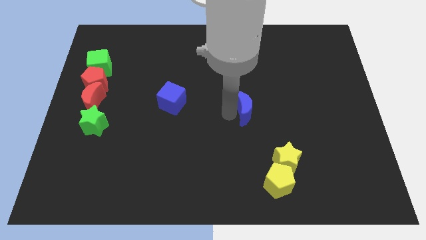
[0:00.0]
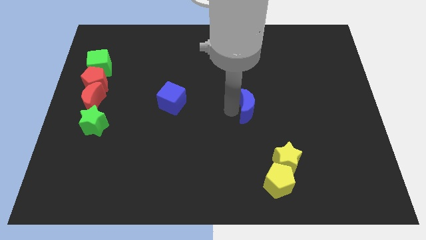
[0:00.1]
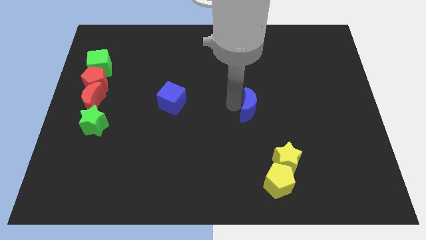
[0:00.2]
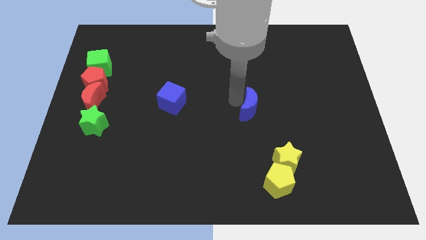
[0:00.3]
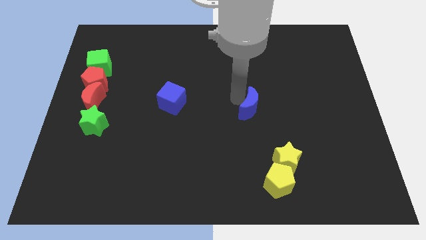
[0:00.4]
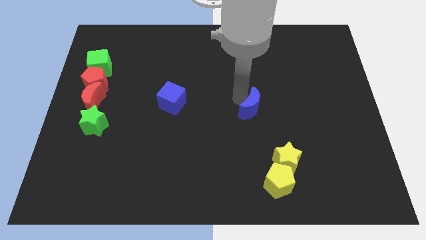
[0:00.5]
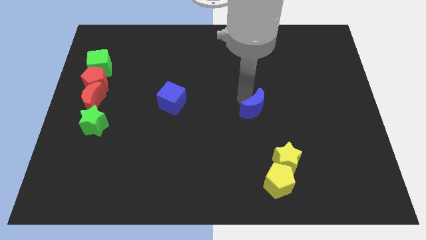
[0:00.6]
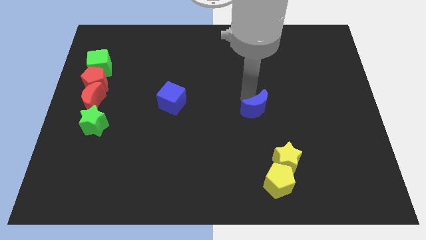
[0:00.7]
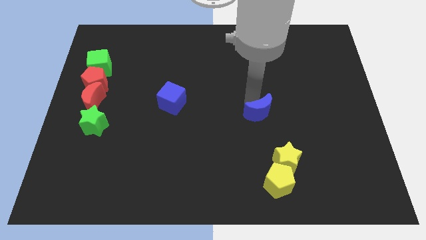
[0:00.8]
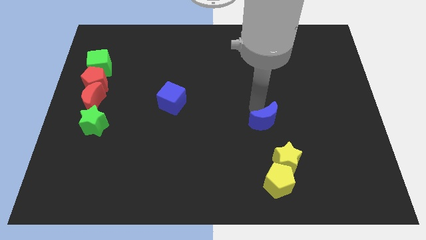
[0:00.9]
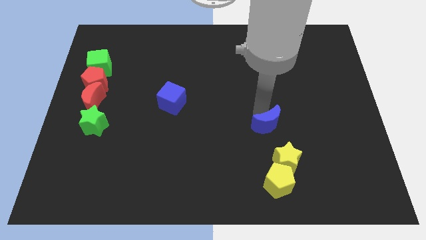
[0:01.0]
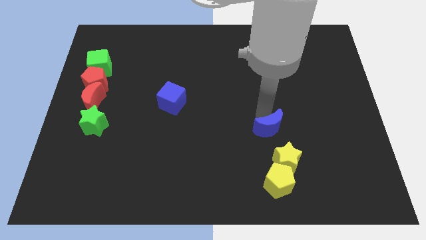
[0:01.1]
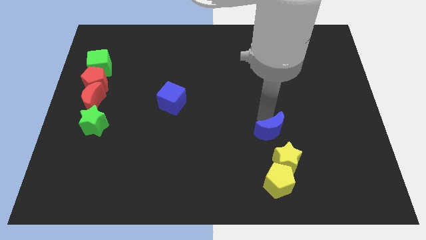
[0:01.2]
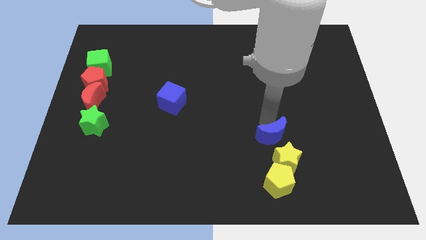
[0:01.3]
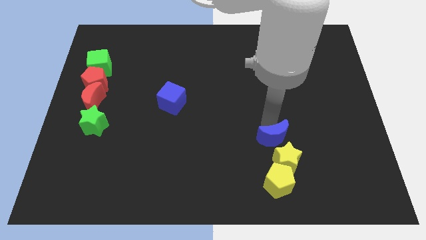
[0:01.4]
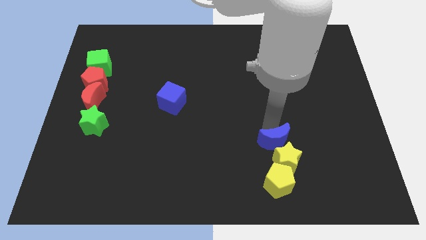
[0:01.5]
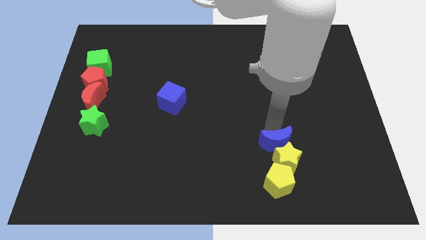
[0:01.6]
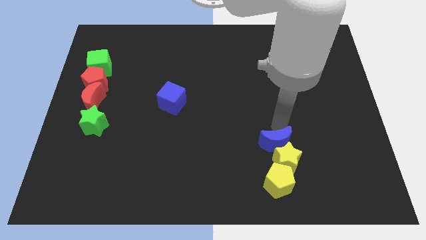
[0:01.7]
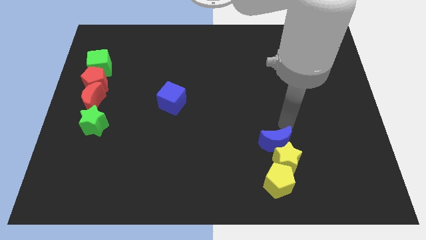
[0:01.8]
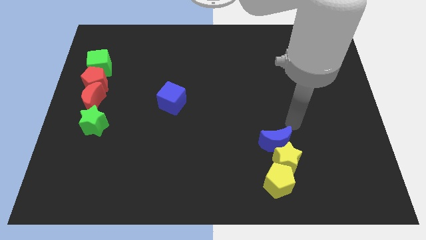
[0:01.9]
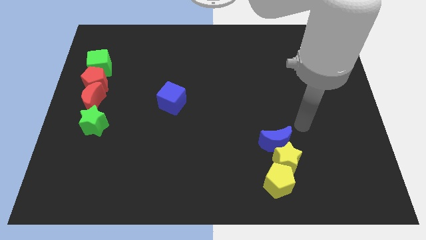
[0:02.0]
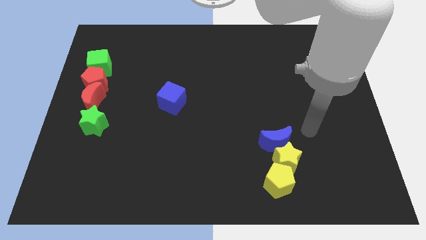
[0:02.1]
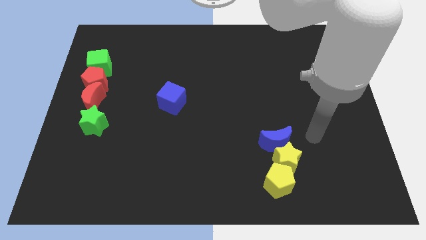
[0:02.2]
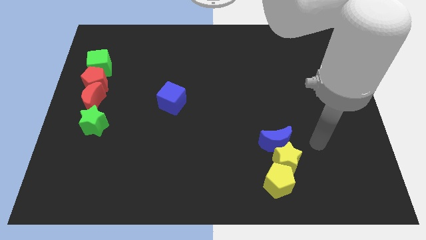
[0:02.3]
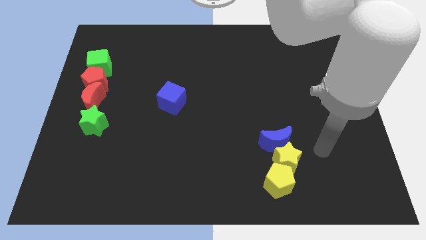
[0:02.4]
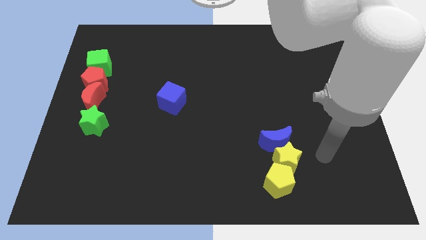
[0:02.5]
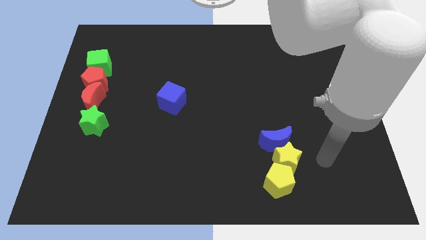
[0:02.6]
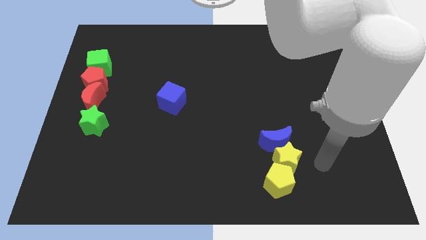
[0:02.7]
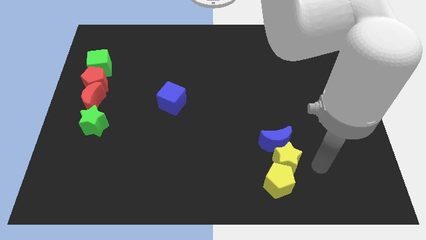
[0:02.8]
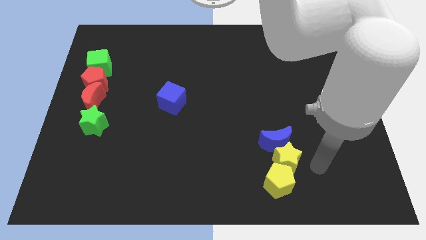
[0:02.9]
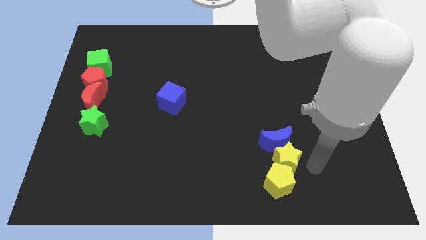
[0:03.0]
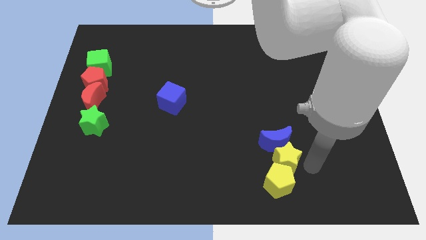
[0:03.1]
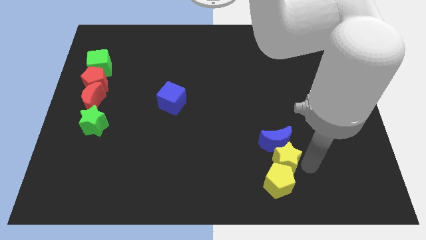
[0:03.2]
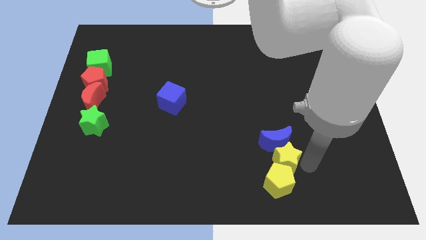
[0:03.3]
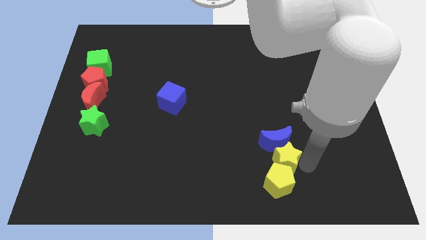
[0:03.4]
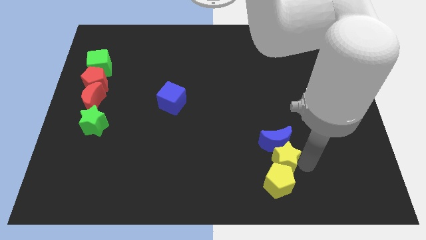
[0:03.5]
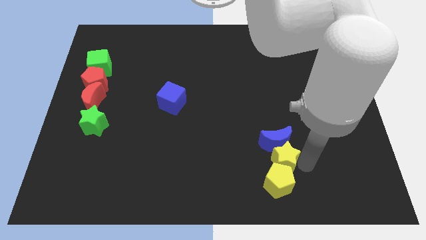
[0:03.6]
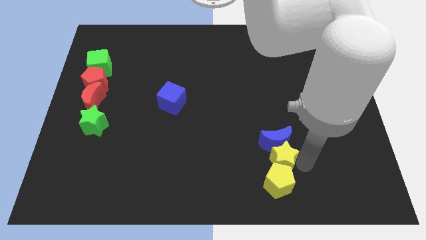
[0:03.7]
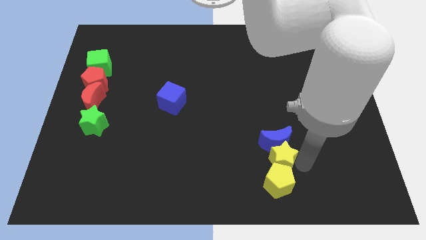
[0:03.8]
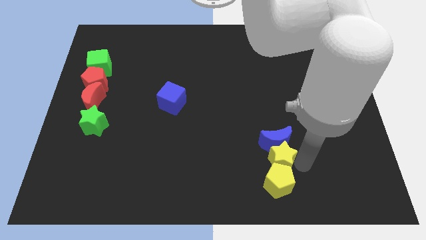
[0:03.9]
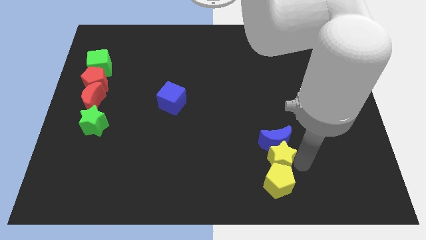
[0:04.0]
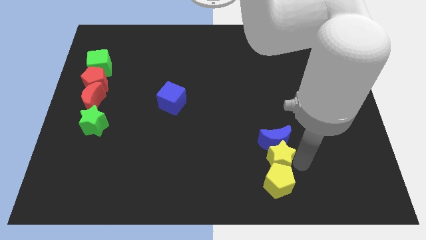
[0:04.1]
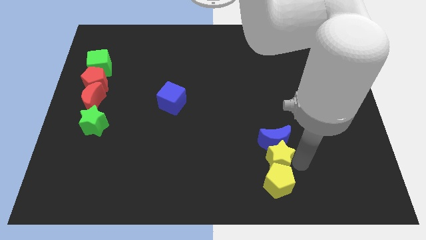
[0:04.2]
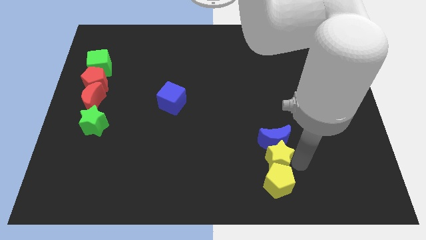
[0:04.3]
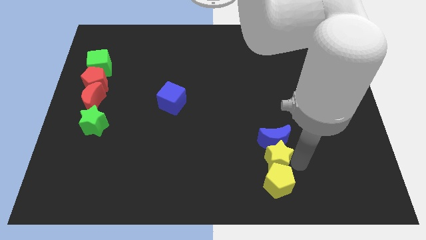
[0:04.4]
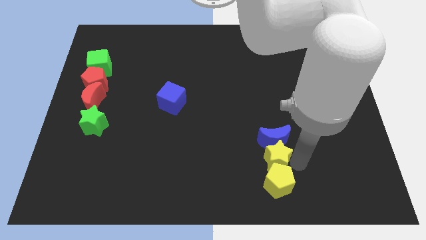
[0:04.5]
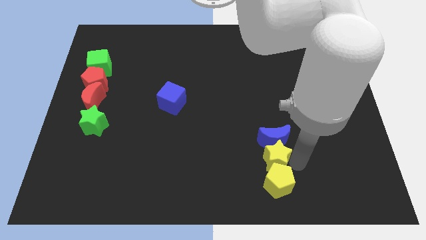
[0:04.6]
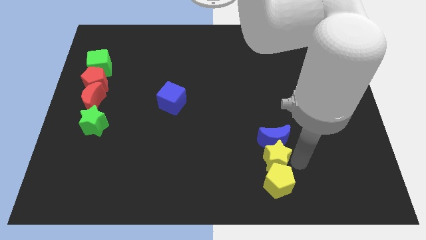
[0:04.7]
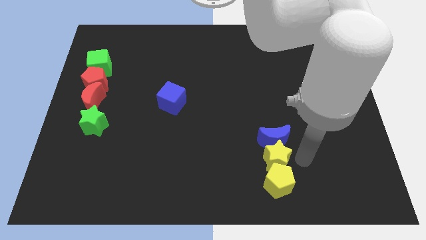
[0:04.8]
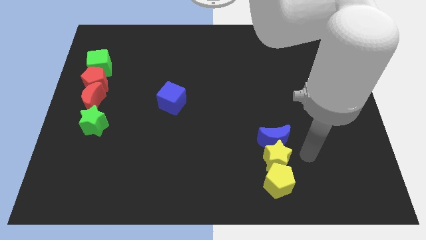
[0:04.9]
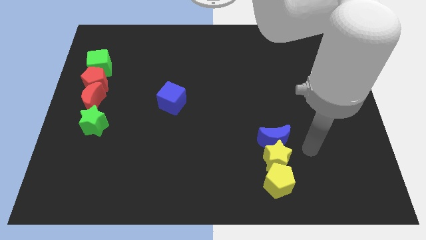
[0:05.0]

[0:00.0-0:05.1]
adjust the yellow star slightly to the left in between the blue moon and yellow pentagon

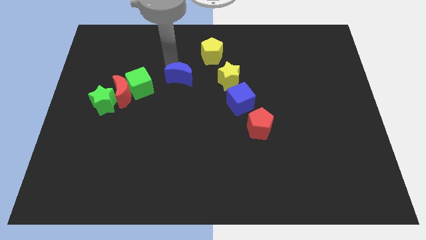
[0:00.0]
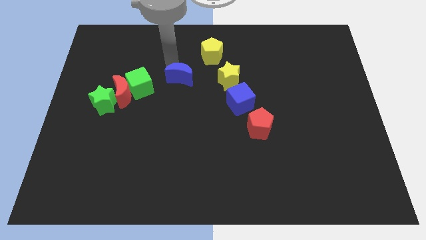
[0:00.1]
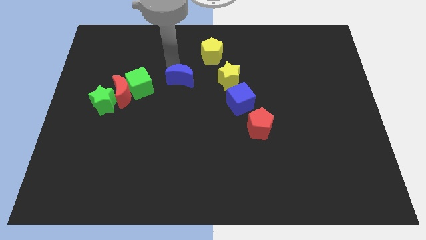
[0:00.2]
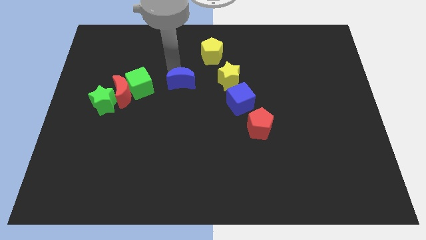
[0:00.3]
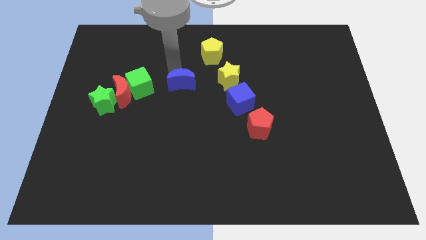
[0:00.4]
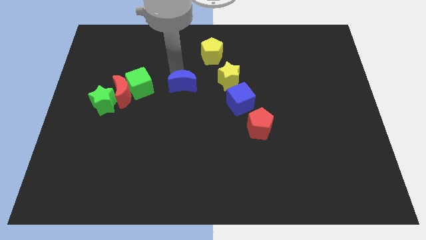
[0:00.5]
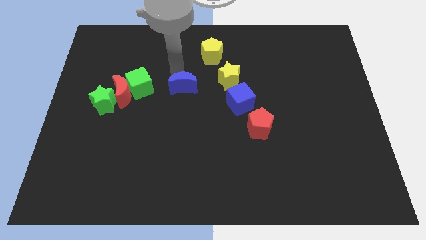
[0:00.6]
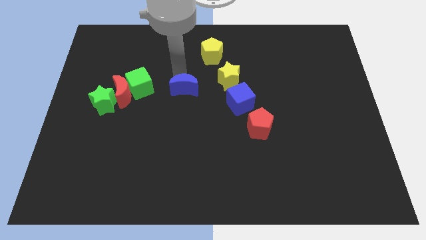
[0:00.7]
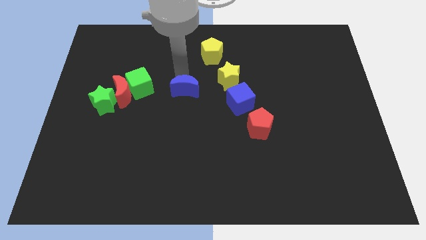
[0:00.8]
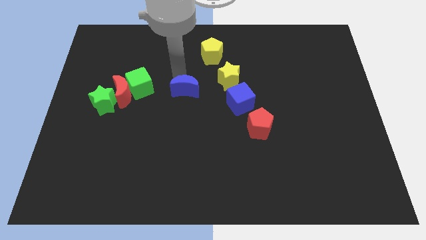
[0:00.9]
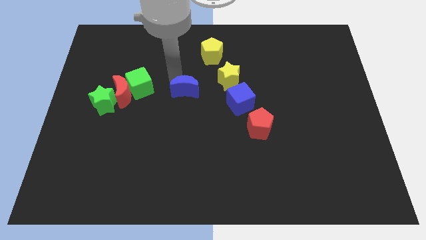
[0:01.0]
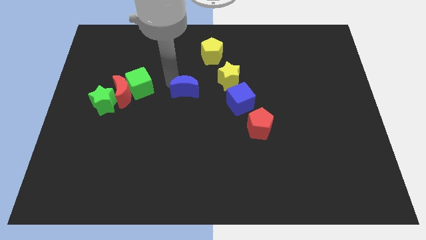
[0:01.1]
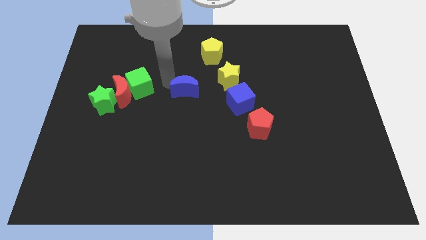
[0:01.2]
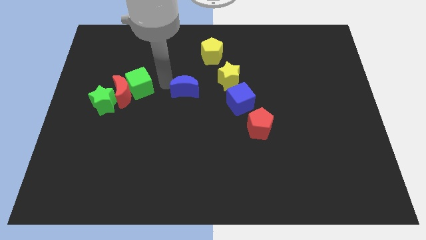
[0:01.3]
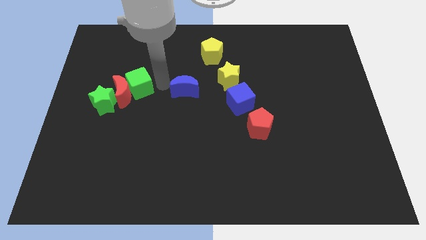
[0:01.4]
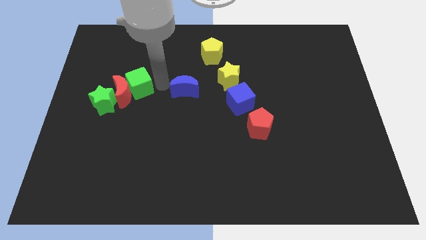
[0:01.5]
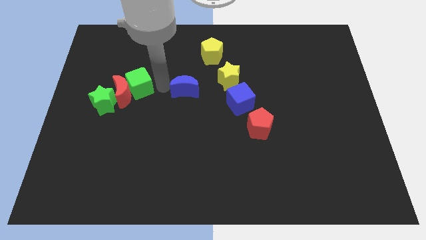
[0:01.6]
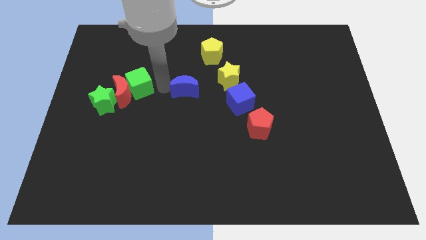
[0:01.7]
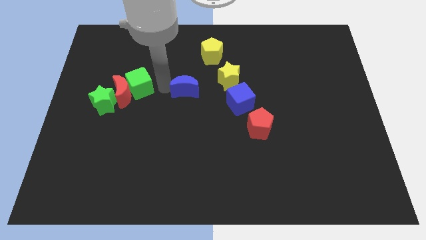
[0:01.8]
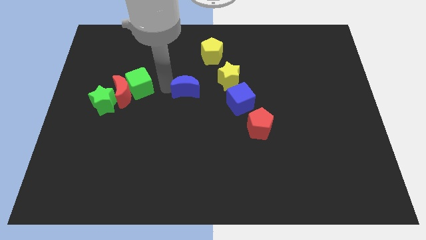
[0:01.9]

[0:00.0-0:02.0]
push the blue crescent left to yellow star

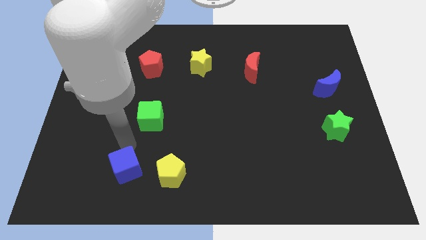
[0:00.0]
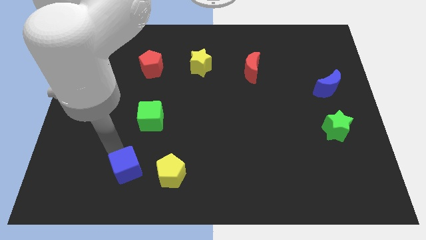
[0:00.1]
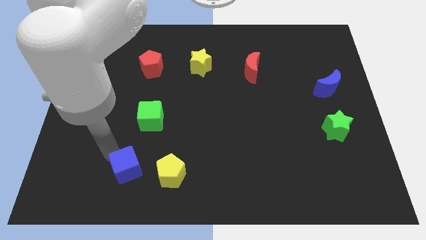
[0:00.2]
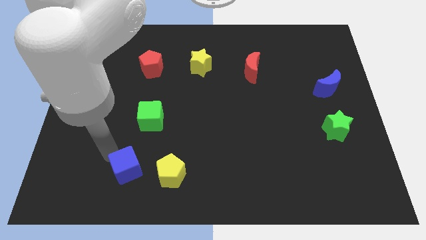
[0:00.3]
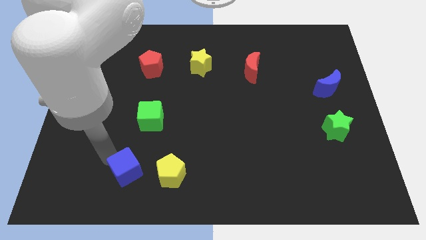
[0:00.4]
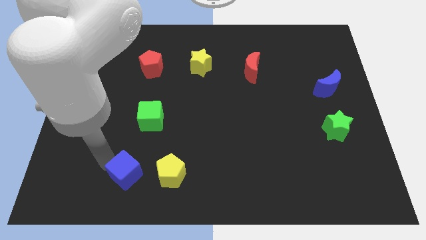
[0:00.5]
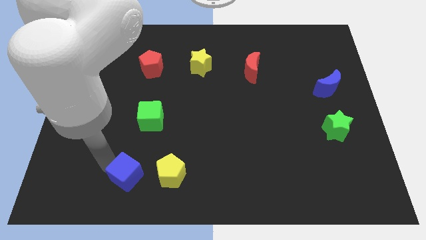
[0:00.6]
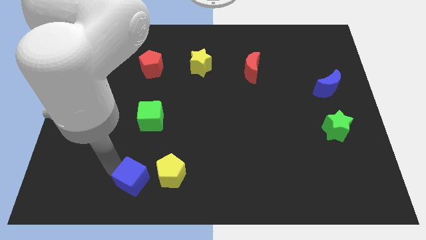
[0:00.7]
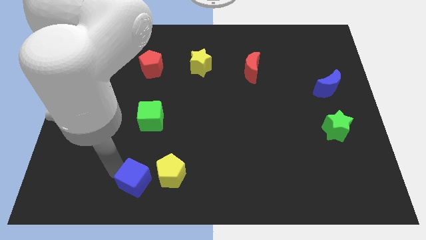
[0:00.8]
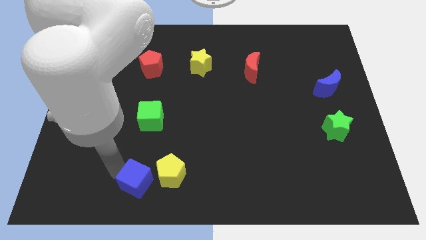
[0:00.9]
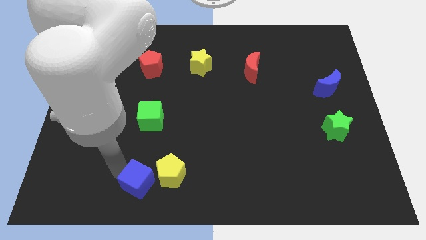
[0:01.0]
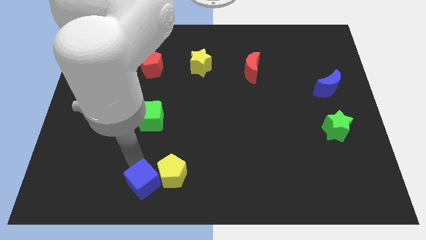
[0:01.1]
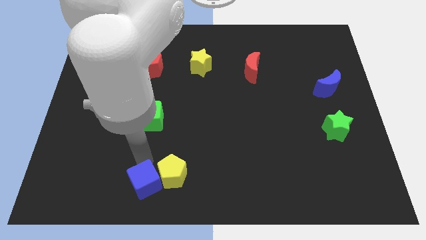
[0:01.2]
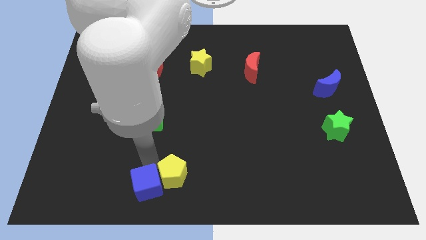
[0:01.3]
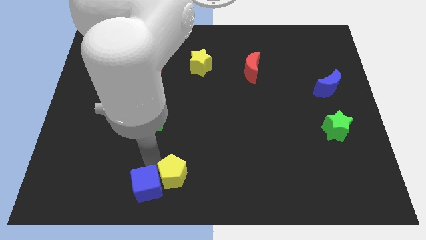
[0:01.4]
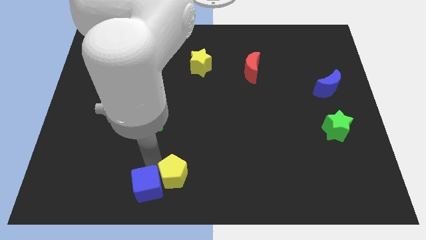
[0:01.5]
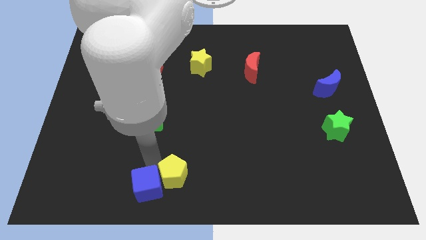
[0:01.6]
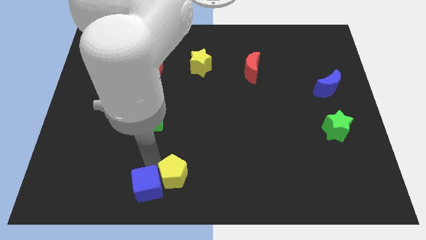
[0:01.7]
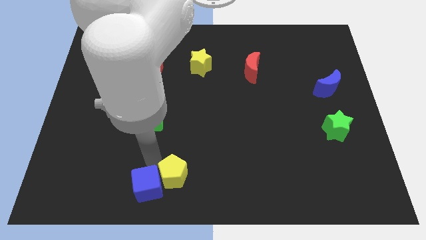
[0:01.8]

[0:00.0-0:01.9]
move the blue cube into the yellow pentagon
